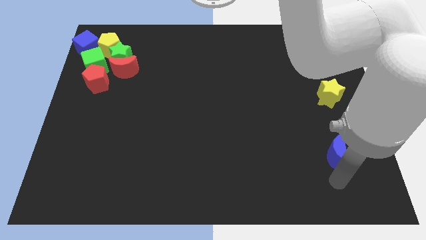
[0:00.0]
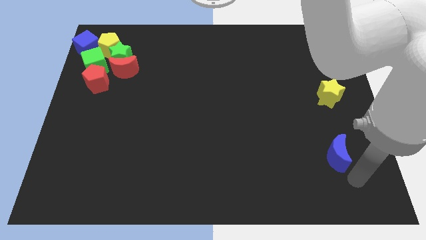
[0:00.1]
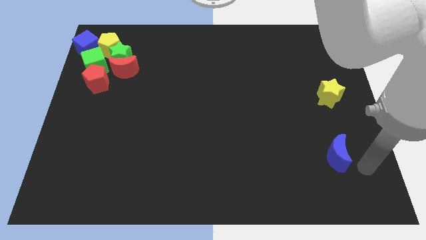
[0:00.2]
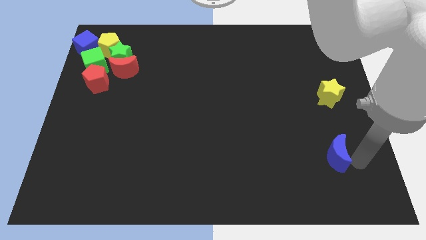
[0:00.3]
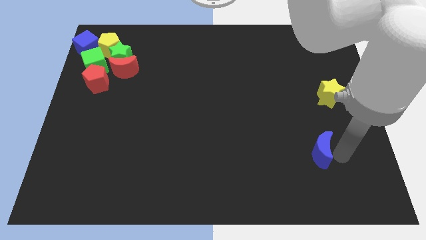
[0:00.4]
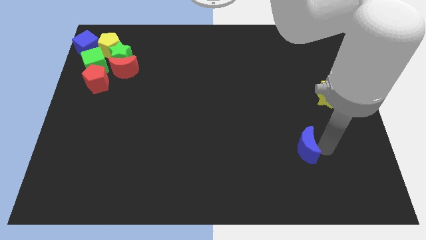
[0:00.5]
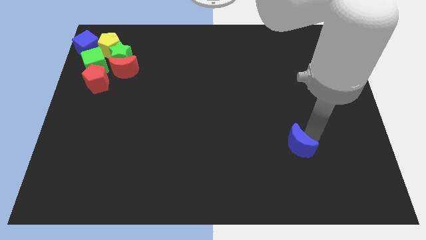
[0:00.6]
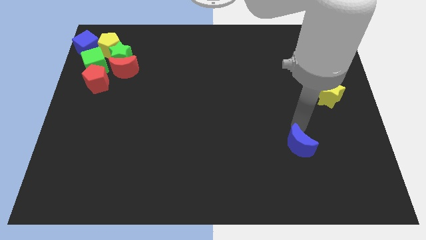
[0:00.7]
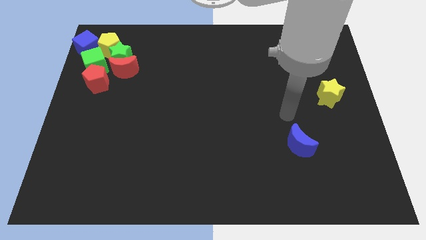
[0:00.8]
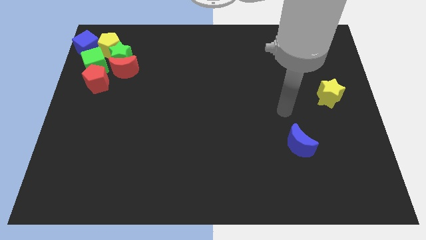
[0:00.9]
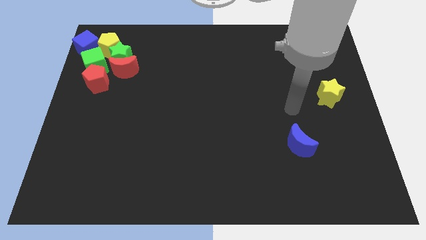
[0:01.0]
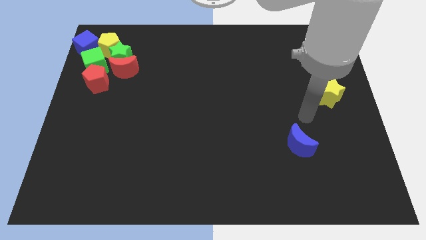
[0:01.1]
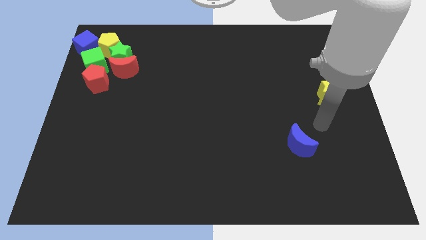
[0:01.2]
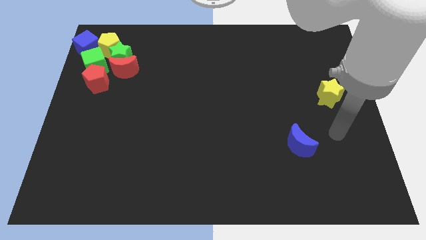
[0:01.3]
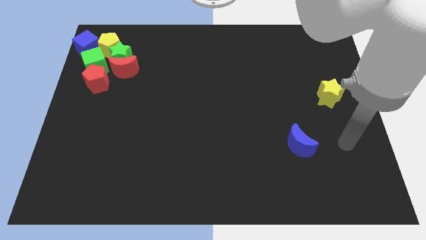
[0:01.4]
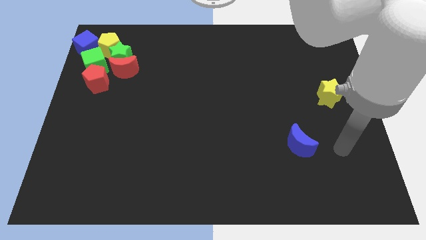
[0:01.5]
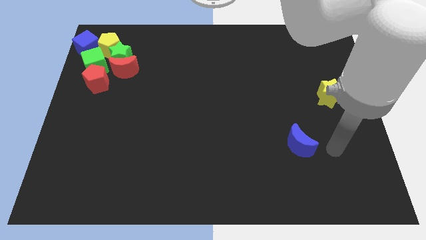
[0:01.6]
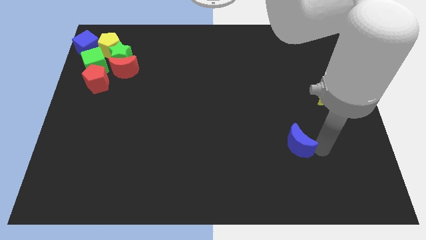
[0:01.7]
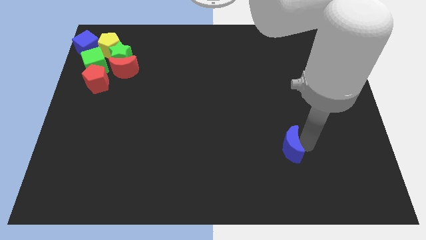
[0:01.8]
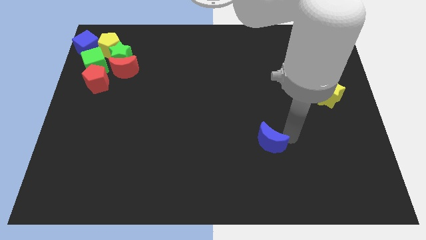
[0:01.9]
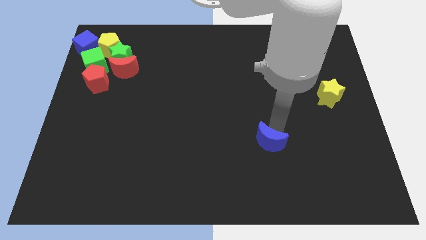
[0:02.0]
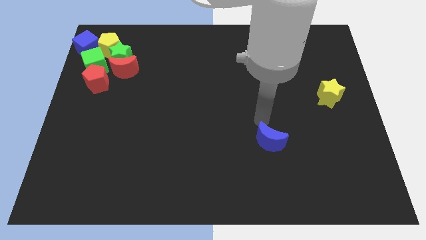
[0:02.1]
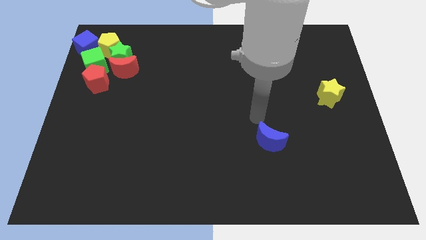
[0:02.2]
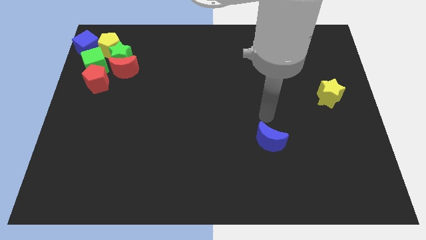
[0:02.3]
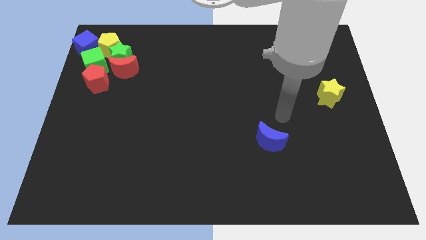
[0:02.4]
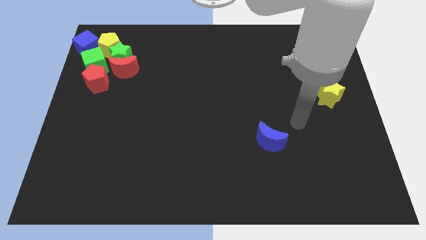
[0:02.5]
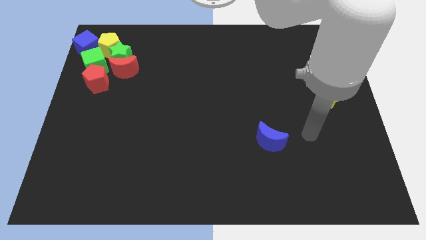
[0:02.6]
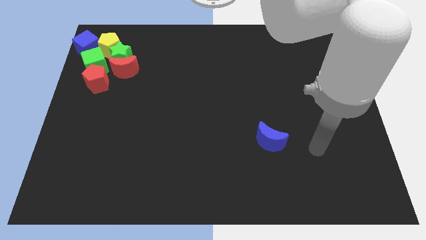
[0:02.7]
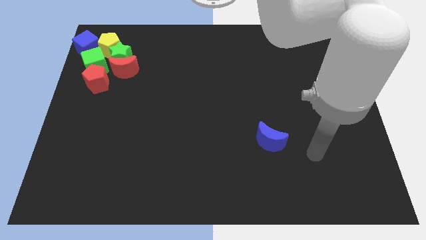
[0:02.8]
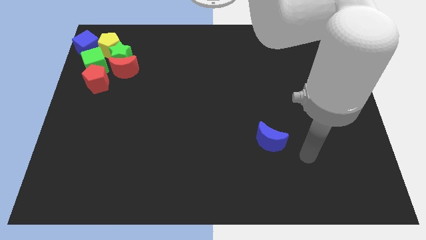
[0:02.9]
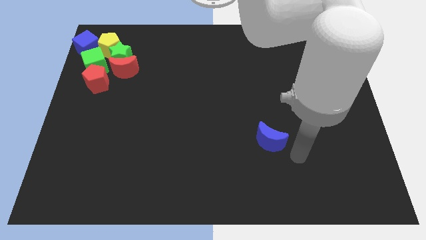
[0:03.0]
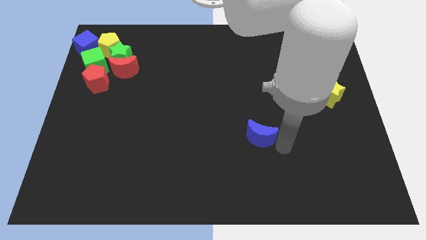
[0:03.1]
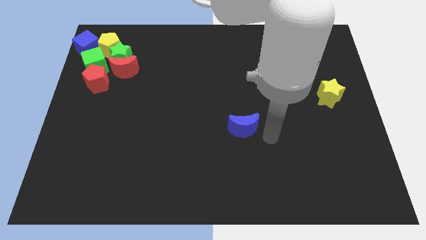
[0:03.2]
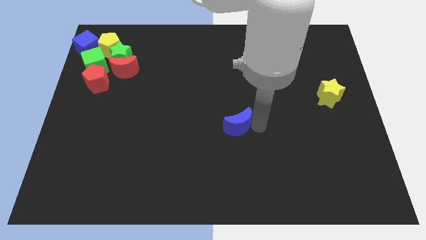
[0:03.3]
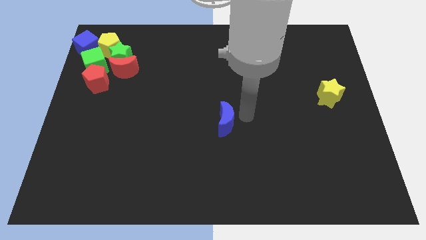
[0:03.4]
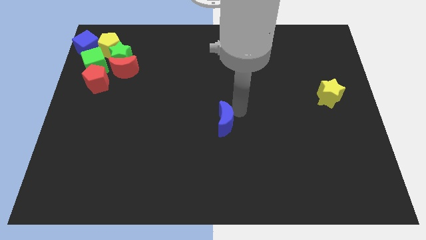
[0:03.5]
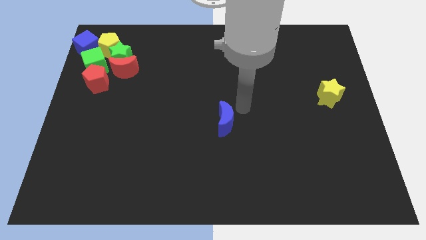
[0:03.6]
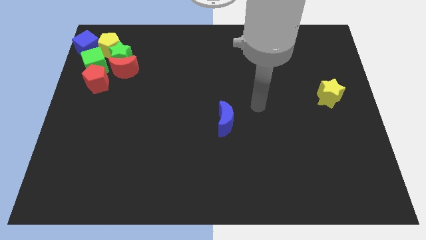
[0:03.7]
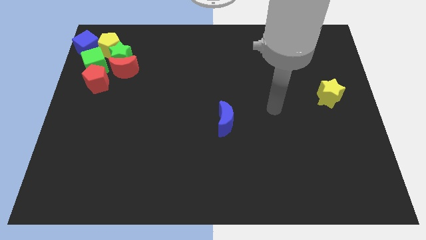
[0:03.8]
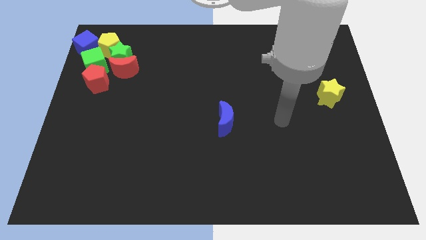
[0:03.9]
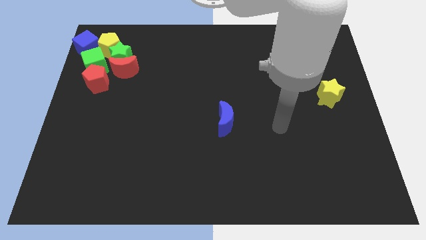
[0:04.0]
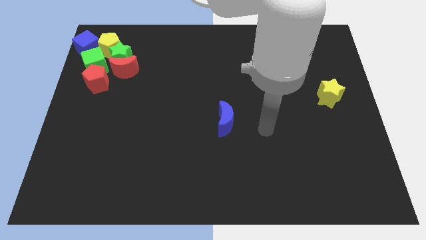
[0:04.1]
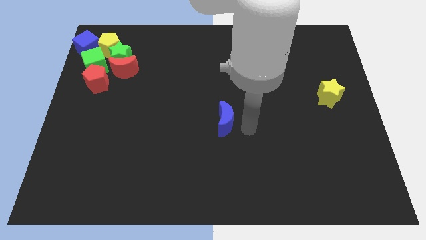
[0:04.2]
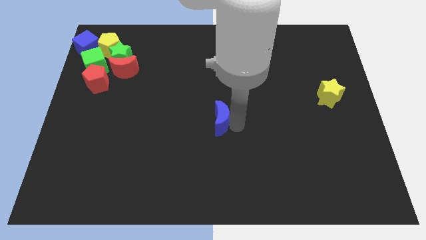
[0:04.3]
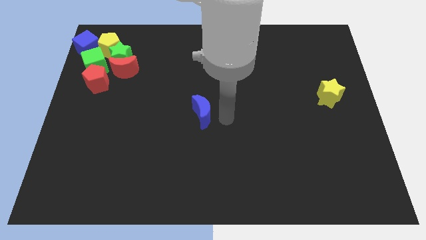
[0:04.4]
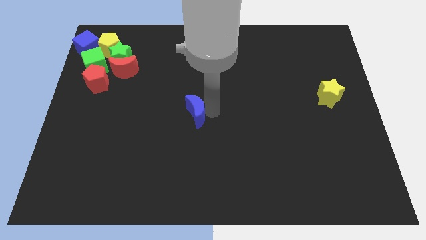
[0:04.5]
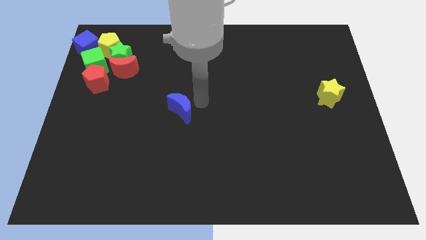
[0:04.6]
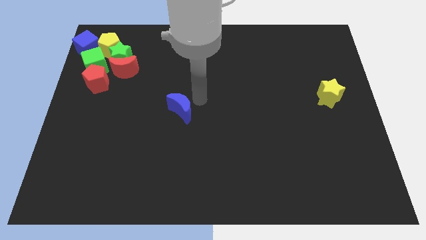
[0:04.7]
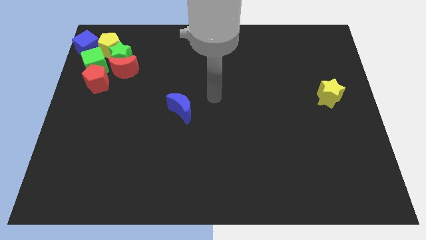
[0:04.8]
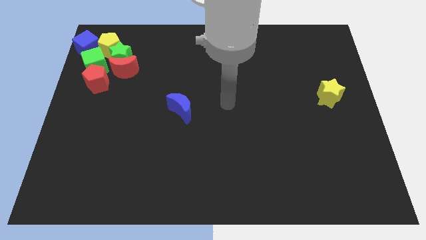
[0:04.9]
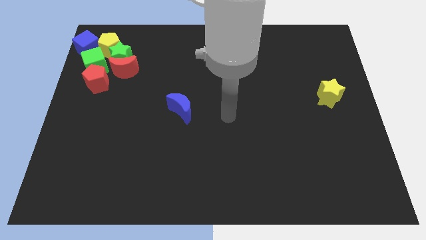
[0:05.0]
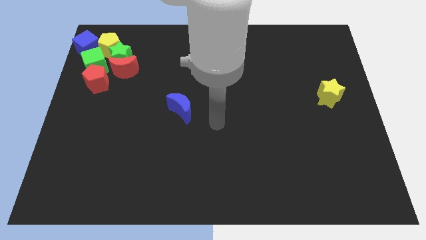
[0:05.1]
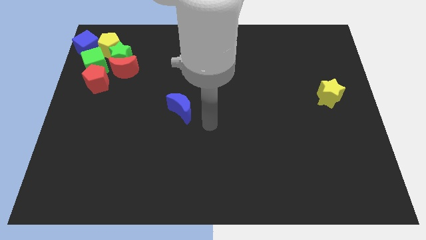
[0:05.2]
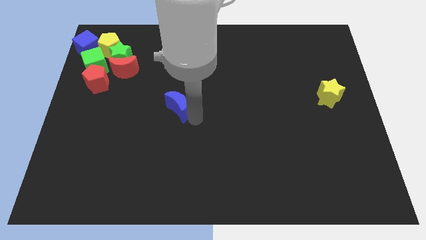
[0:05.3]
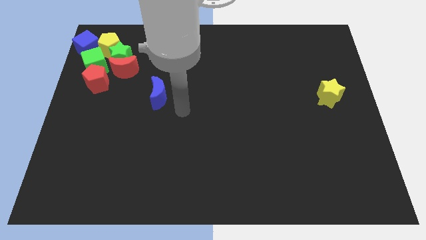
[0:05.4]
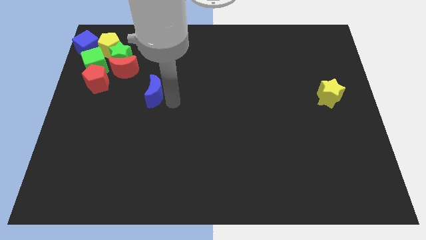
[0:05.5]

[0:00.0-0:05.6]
drag the blue crescent towards the group of blocks

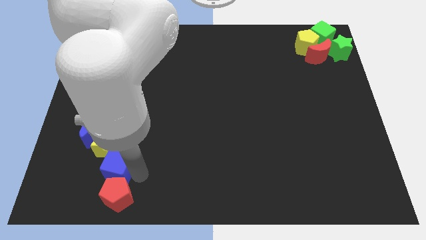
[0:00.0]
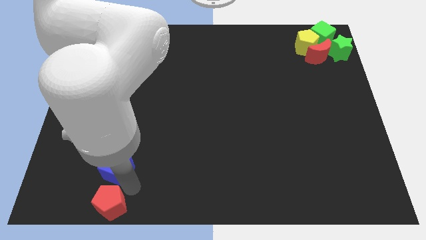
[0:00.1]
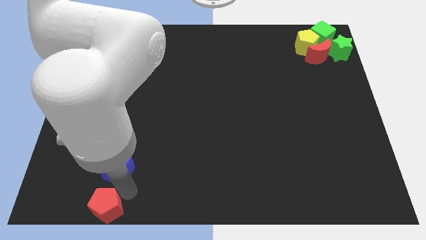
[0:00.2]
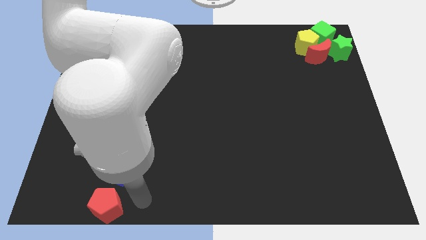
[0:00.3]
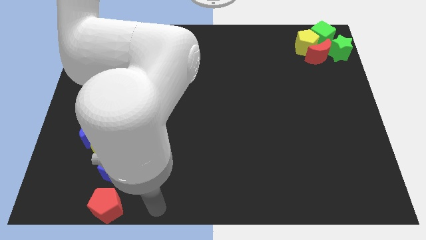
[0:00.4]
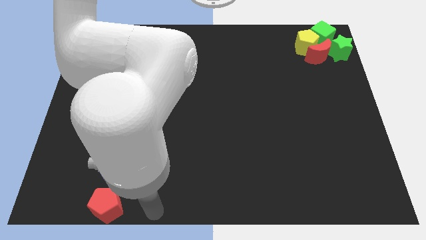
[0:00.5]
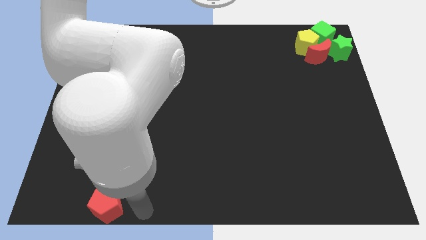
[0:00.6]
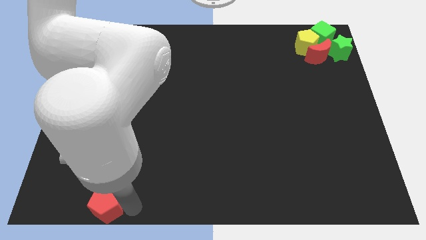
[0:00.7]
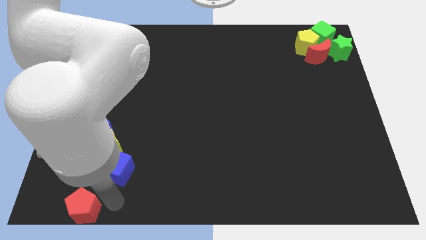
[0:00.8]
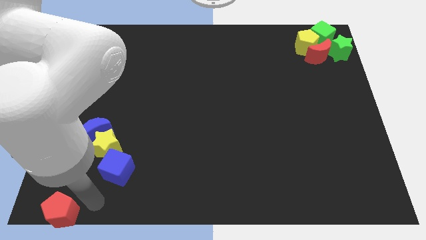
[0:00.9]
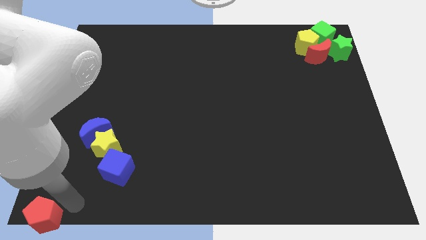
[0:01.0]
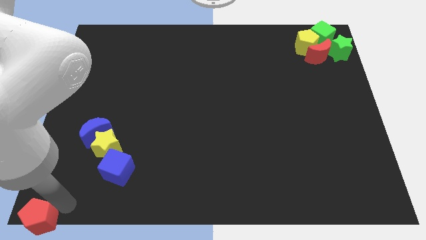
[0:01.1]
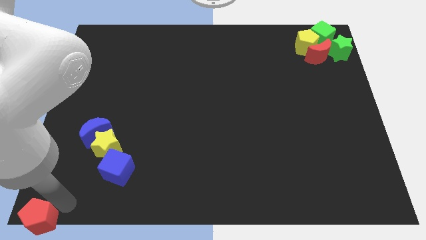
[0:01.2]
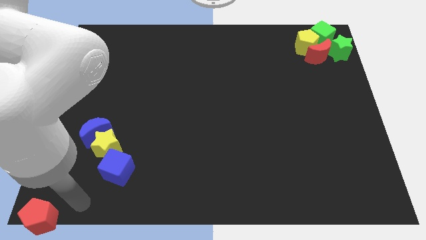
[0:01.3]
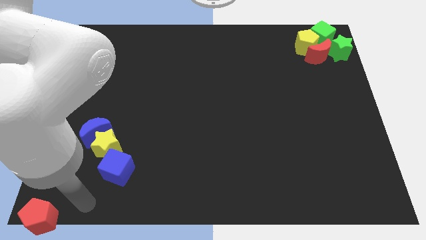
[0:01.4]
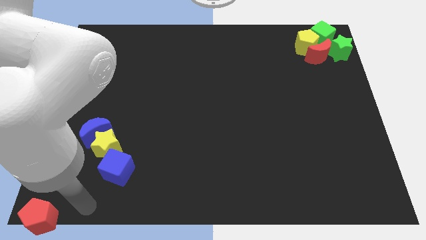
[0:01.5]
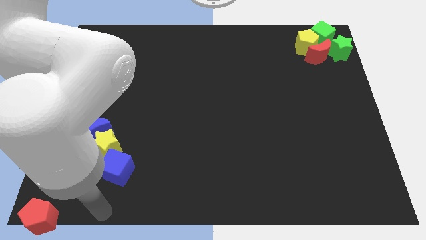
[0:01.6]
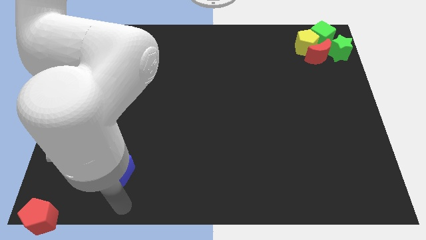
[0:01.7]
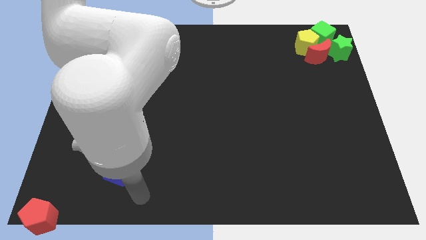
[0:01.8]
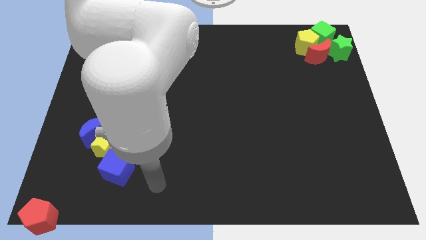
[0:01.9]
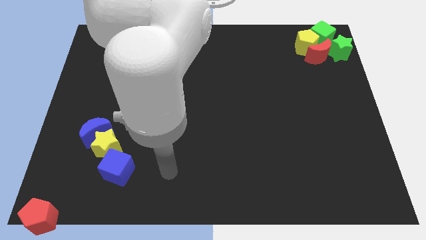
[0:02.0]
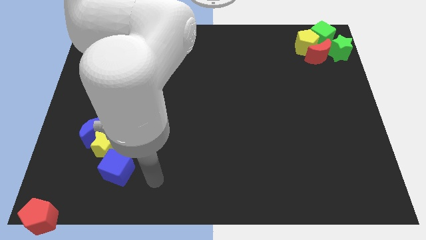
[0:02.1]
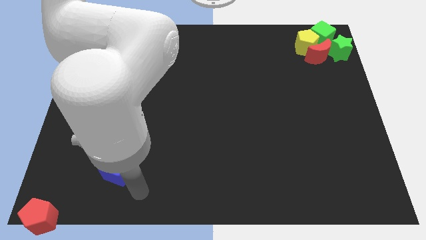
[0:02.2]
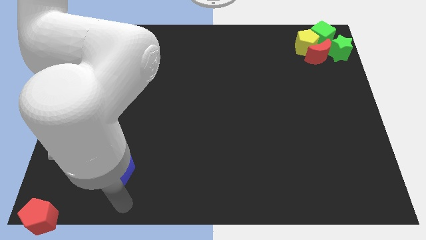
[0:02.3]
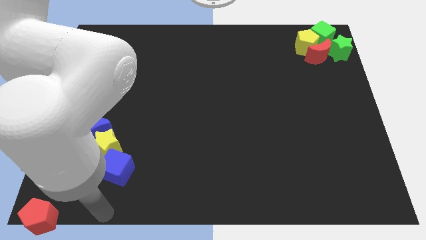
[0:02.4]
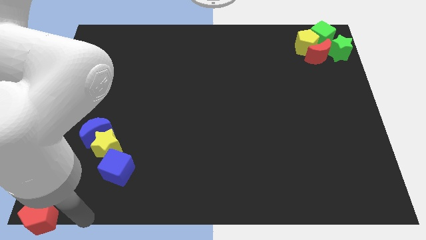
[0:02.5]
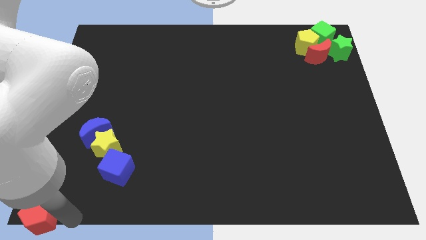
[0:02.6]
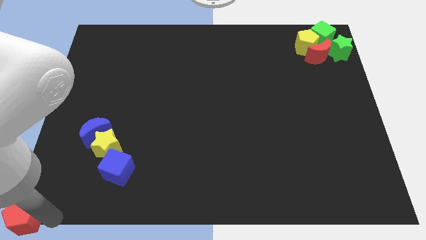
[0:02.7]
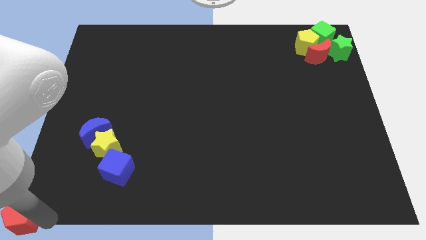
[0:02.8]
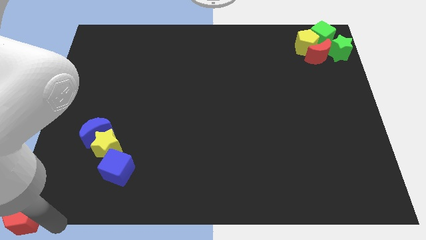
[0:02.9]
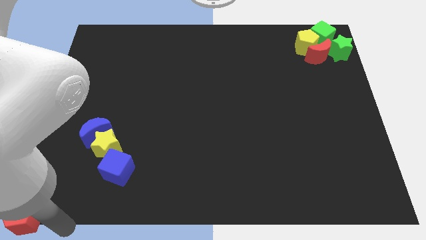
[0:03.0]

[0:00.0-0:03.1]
slide the red pentagon to the bottom left corner of the board

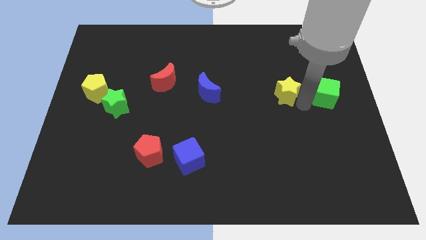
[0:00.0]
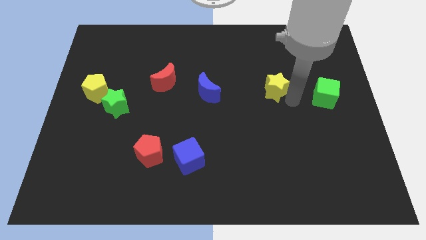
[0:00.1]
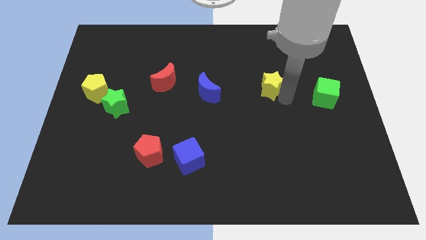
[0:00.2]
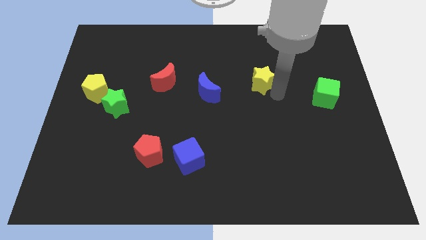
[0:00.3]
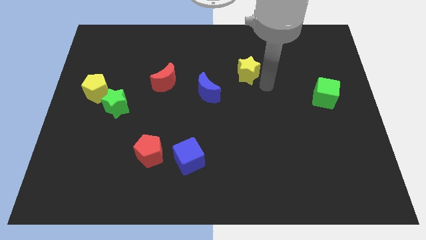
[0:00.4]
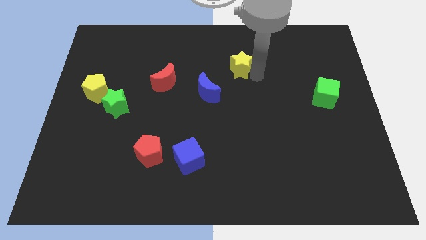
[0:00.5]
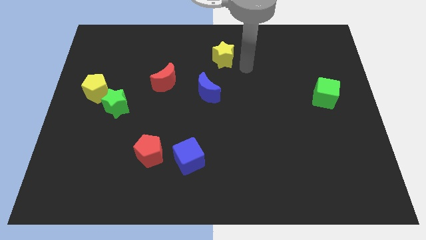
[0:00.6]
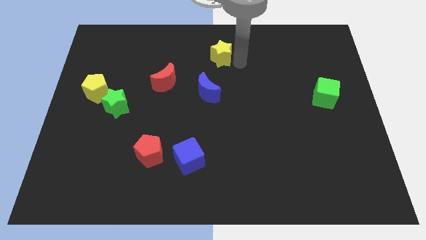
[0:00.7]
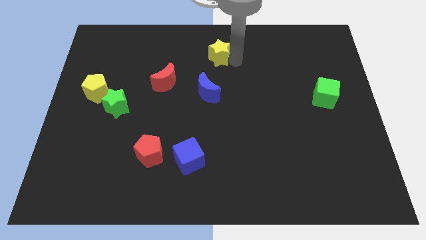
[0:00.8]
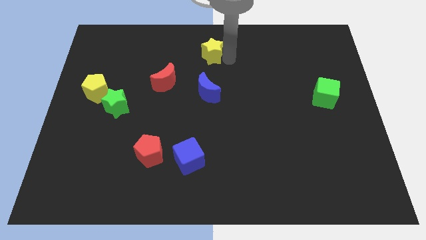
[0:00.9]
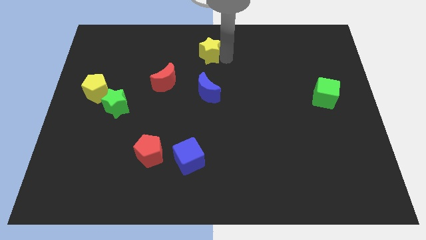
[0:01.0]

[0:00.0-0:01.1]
place the yellow star above the blue moon
